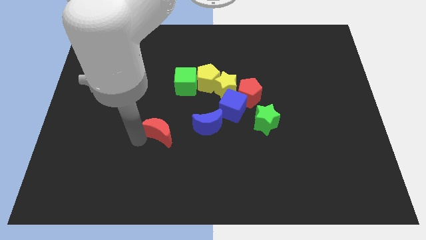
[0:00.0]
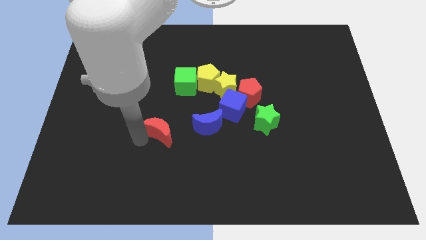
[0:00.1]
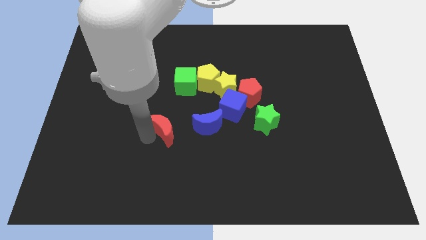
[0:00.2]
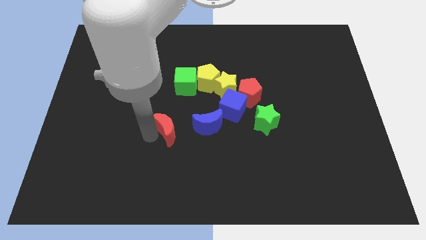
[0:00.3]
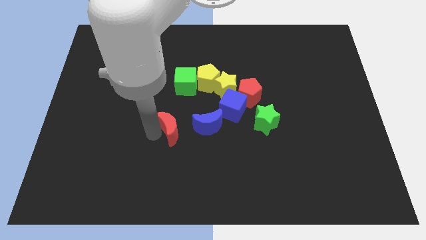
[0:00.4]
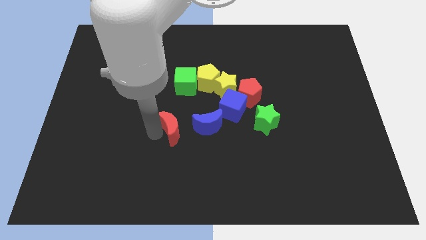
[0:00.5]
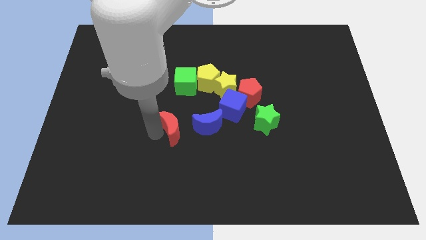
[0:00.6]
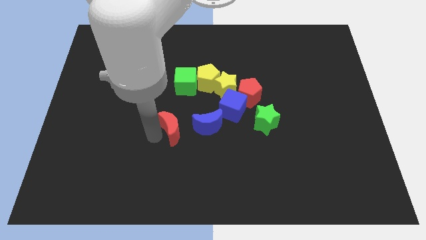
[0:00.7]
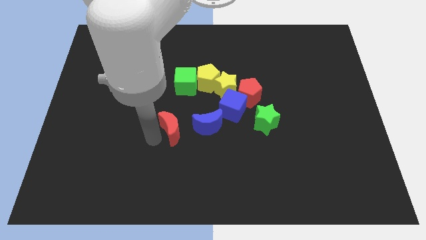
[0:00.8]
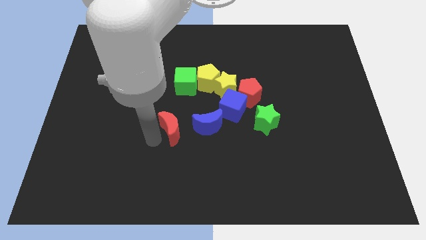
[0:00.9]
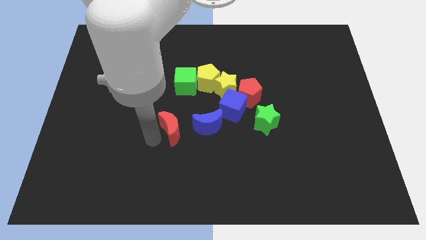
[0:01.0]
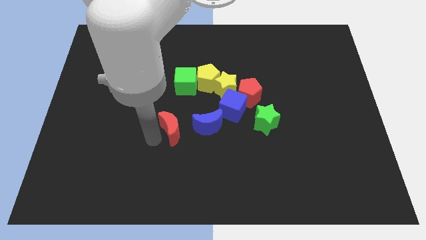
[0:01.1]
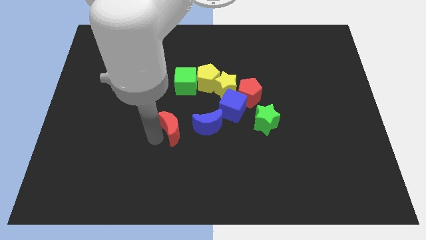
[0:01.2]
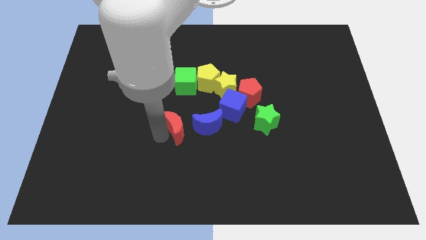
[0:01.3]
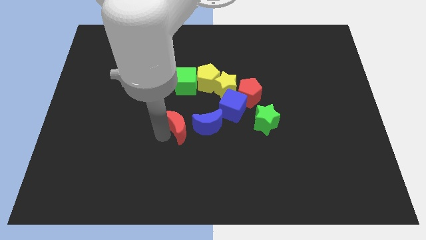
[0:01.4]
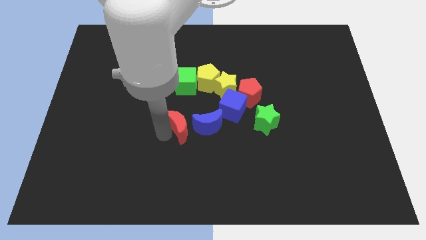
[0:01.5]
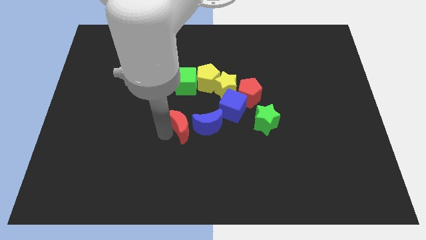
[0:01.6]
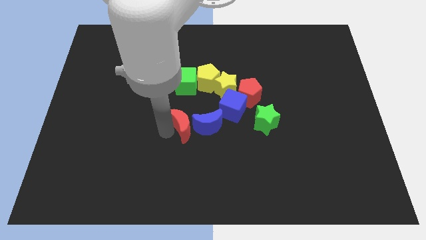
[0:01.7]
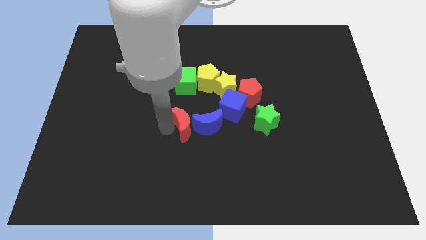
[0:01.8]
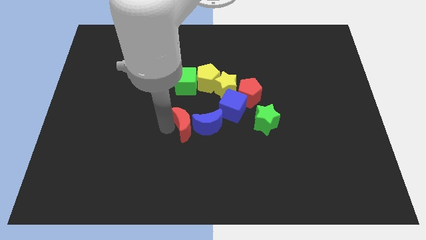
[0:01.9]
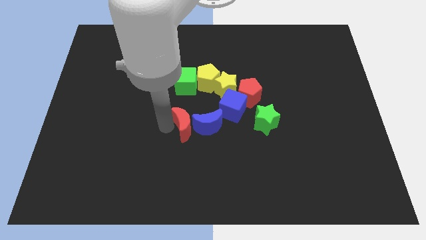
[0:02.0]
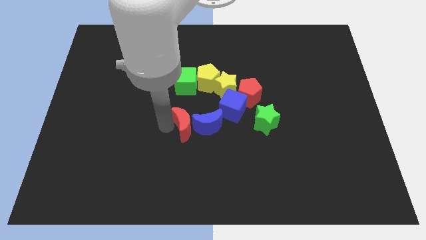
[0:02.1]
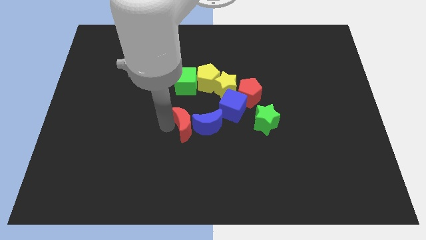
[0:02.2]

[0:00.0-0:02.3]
push the red moon close to blue moon

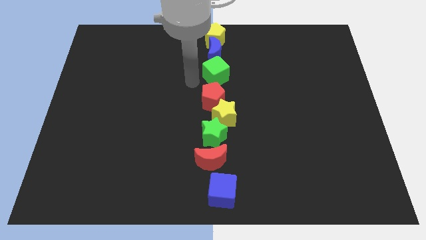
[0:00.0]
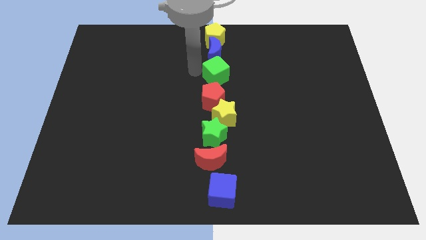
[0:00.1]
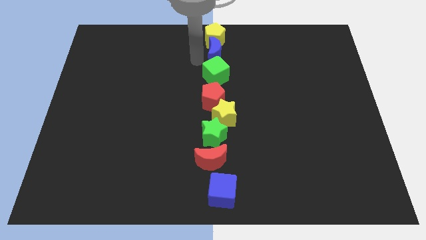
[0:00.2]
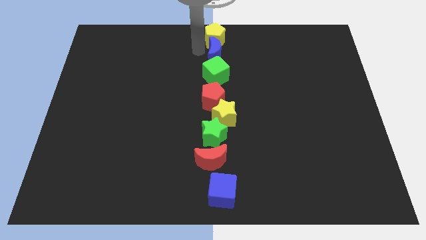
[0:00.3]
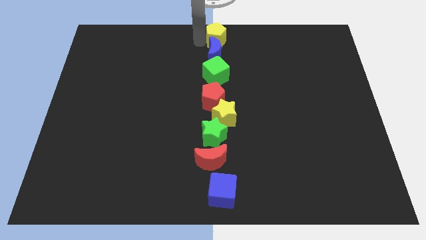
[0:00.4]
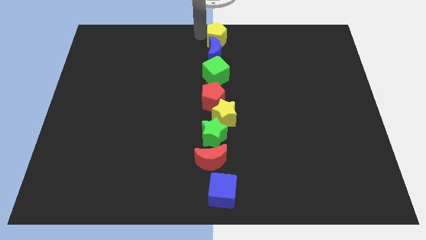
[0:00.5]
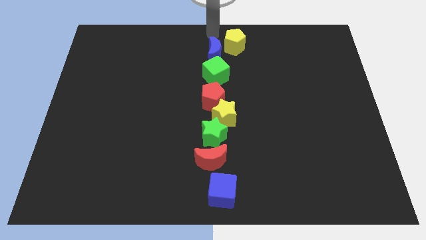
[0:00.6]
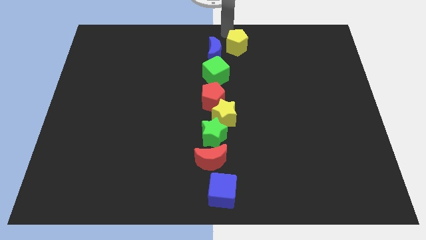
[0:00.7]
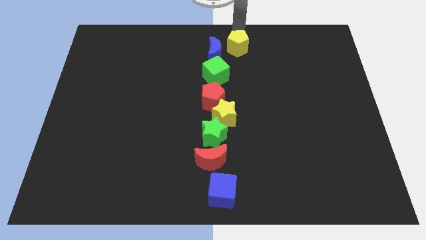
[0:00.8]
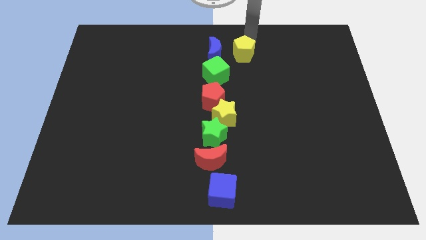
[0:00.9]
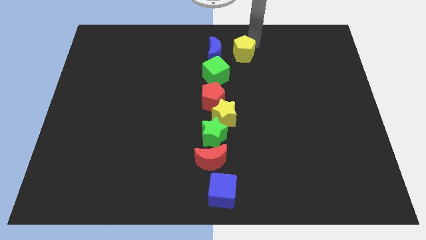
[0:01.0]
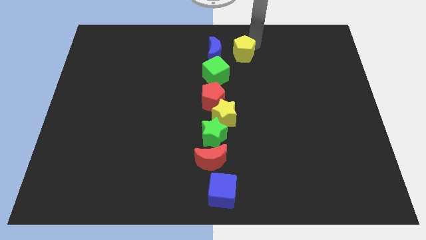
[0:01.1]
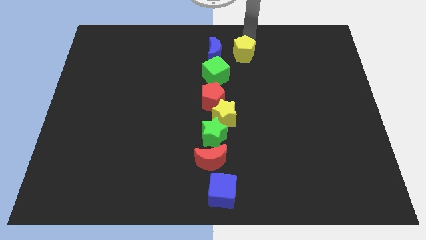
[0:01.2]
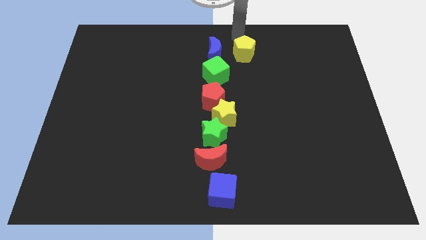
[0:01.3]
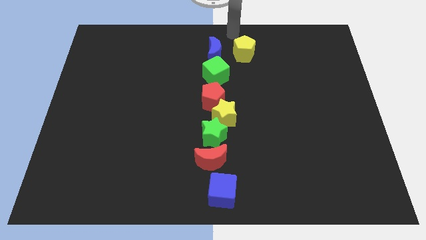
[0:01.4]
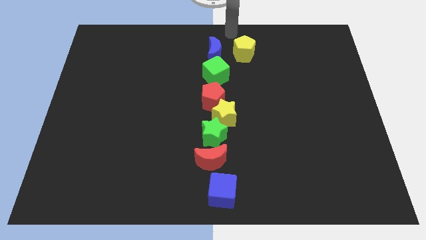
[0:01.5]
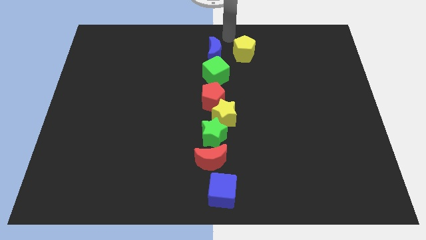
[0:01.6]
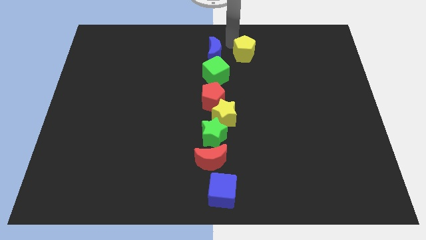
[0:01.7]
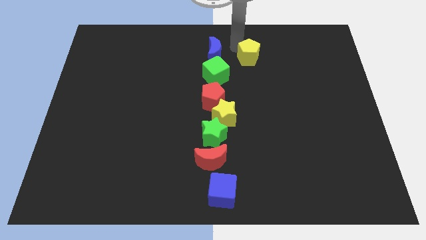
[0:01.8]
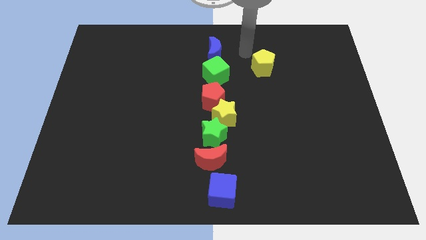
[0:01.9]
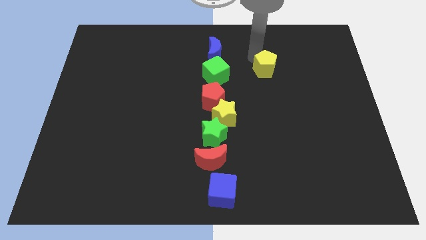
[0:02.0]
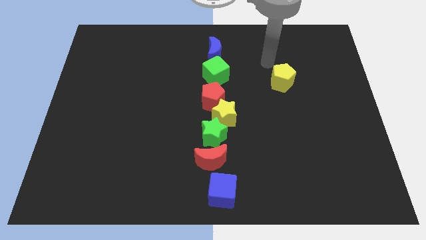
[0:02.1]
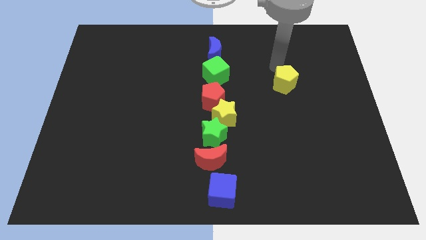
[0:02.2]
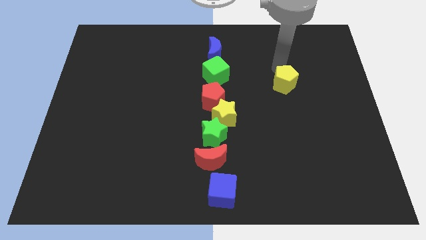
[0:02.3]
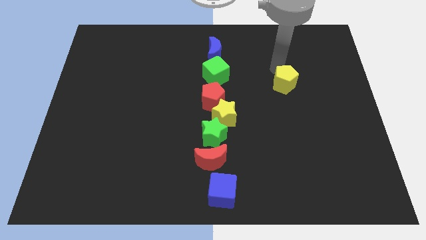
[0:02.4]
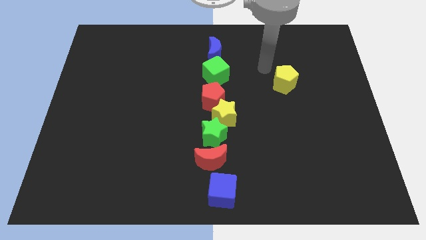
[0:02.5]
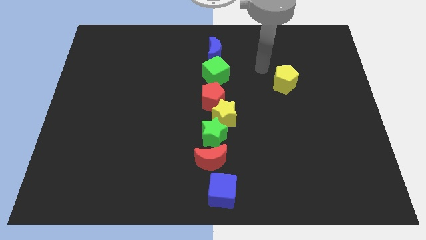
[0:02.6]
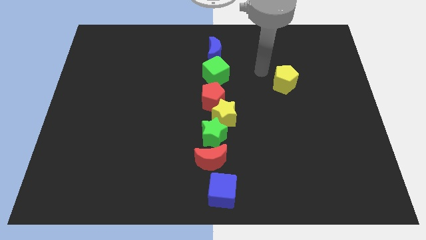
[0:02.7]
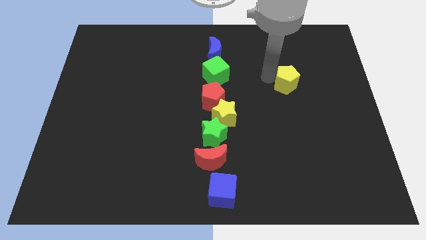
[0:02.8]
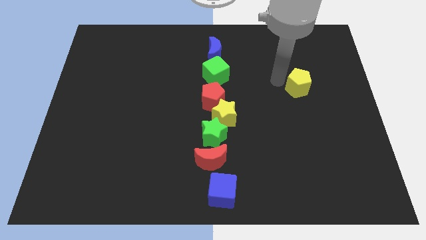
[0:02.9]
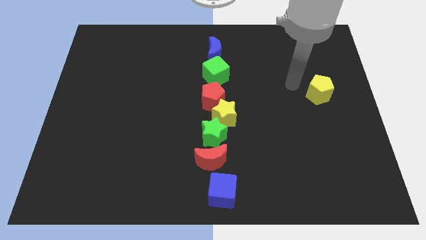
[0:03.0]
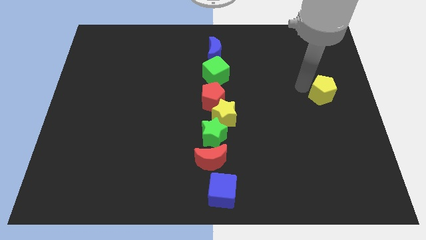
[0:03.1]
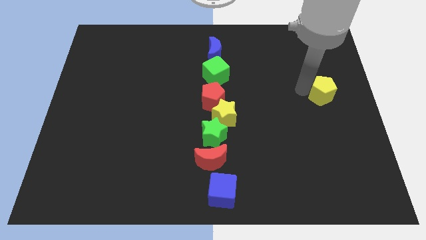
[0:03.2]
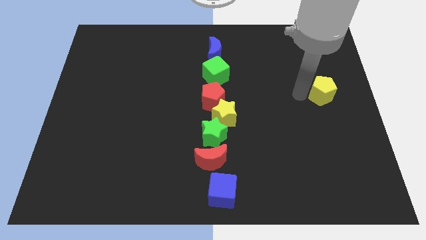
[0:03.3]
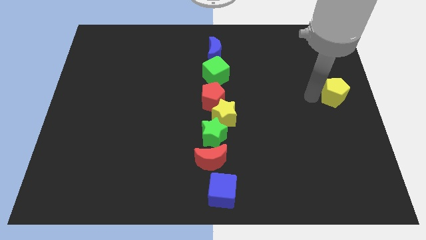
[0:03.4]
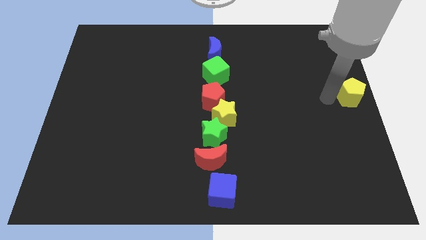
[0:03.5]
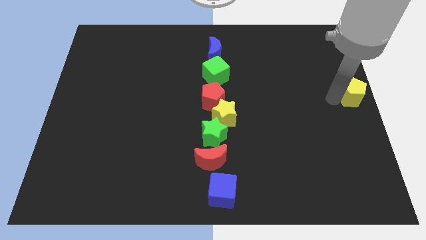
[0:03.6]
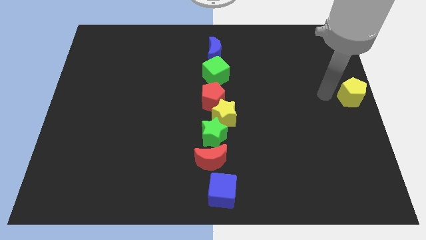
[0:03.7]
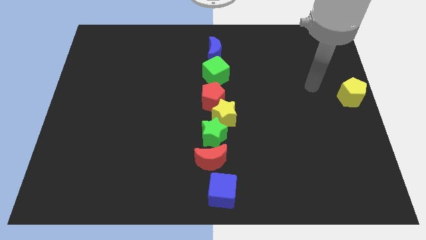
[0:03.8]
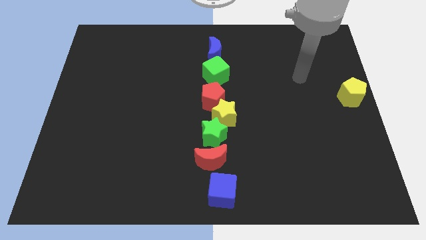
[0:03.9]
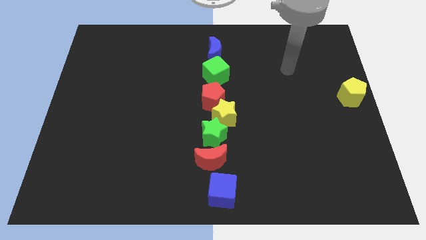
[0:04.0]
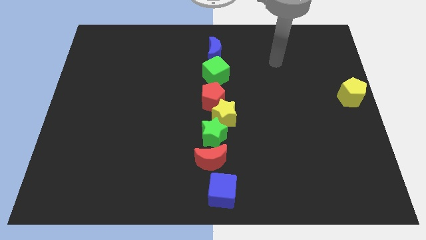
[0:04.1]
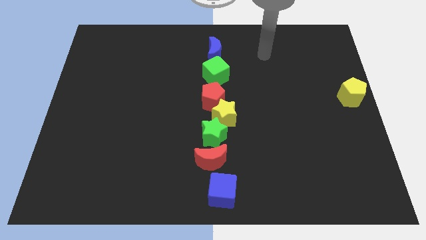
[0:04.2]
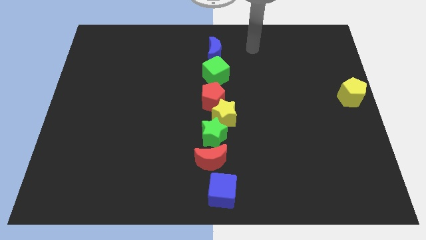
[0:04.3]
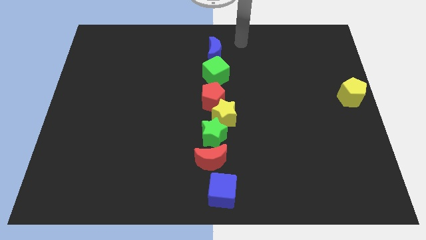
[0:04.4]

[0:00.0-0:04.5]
move the yellow pentagon to the right center of the board

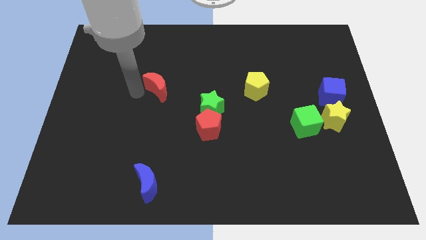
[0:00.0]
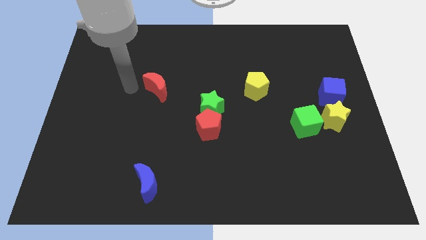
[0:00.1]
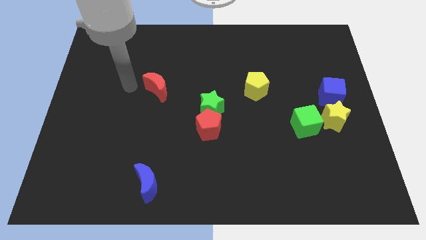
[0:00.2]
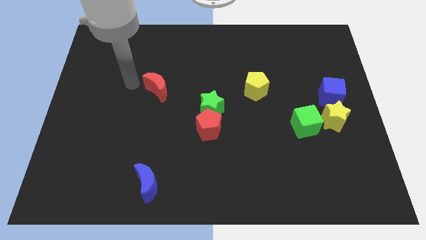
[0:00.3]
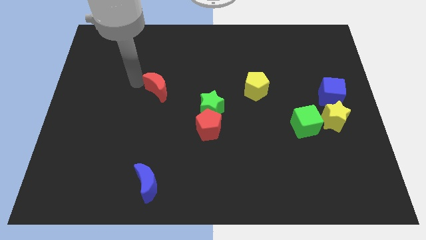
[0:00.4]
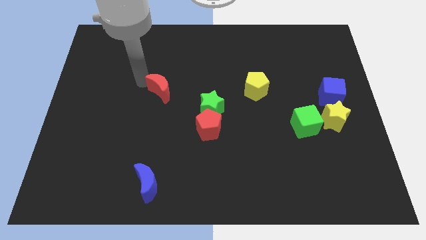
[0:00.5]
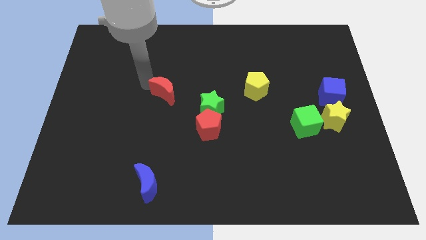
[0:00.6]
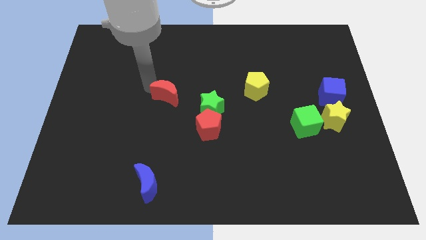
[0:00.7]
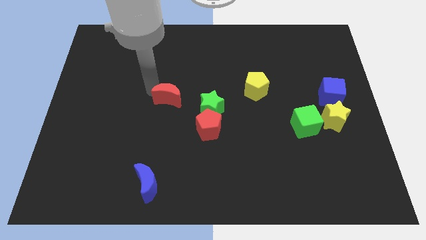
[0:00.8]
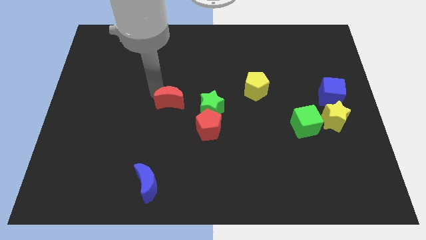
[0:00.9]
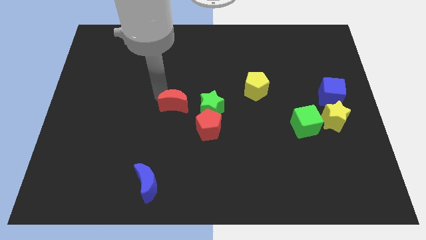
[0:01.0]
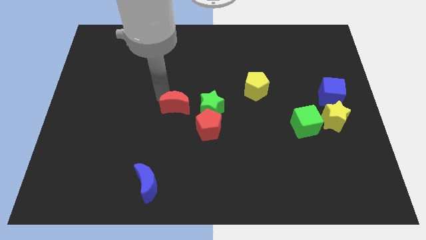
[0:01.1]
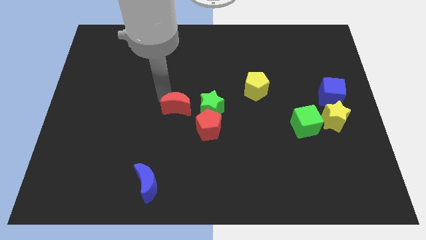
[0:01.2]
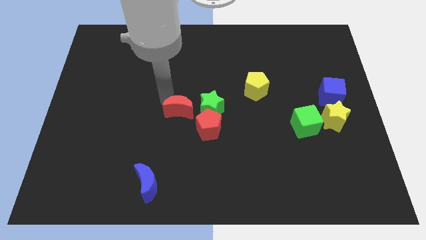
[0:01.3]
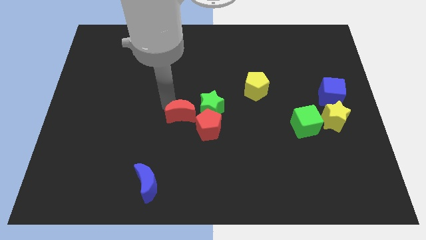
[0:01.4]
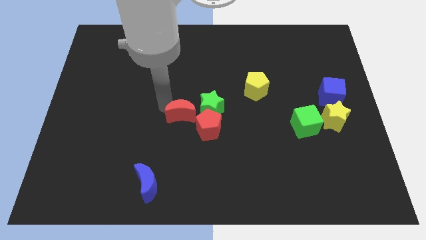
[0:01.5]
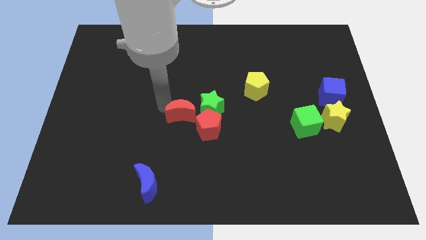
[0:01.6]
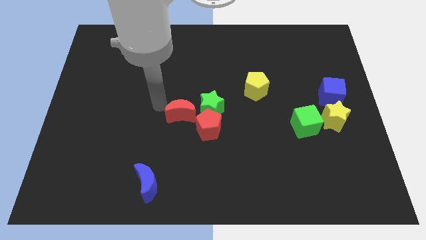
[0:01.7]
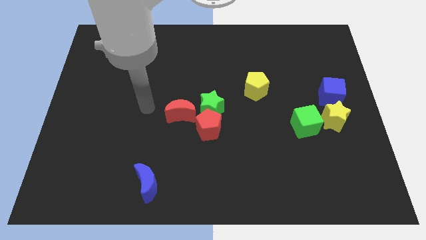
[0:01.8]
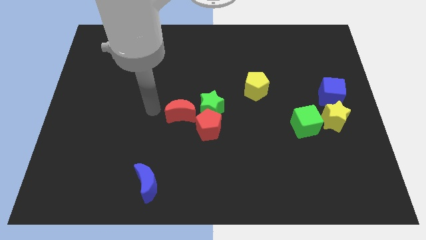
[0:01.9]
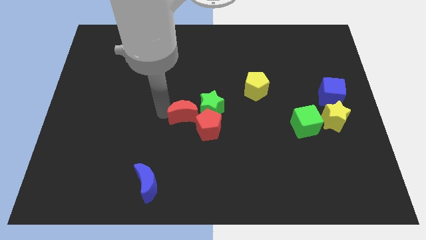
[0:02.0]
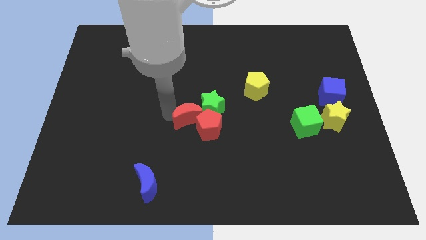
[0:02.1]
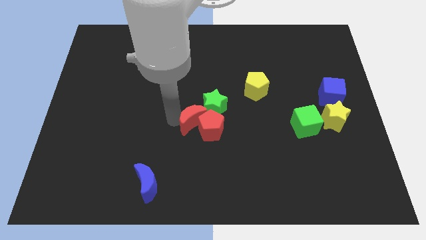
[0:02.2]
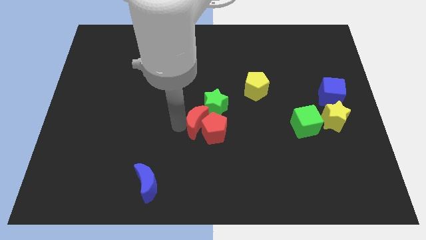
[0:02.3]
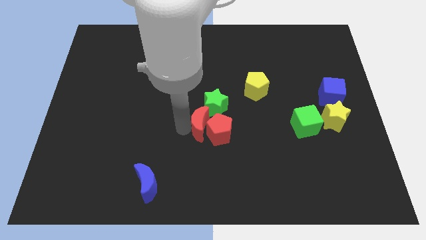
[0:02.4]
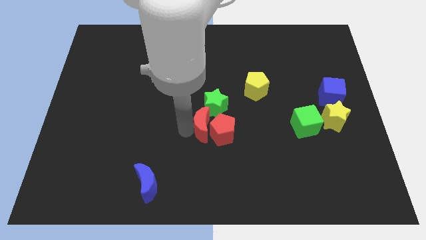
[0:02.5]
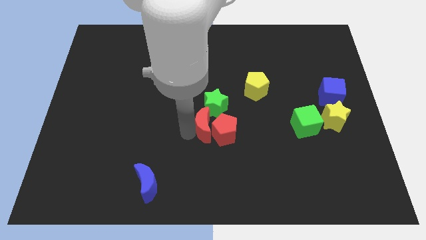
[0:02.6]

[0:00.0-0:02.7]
push the red moon into the red pentagon
